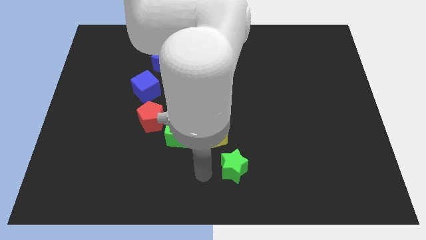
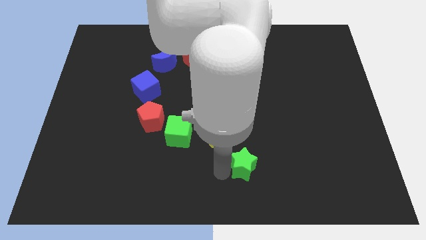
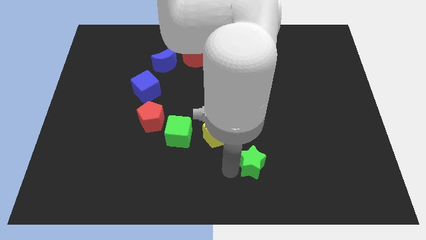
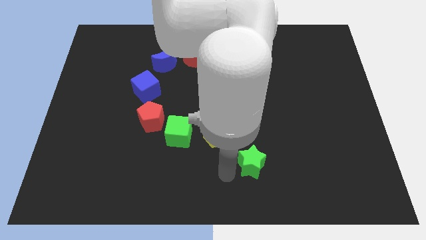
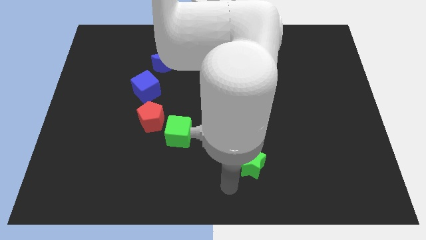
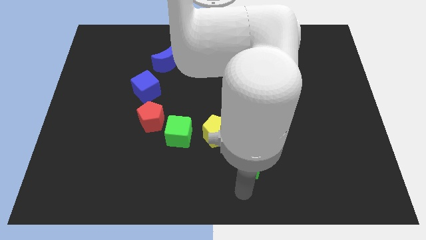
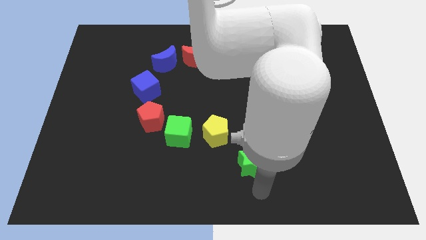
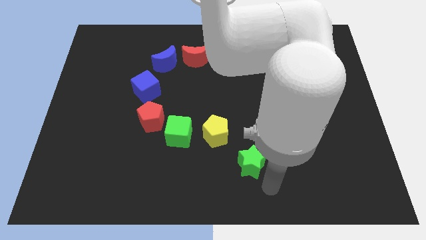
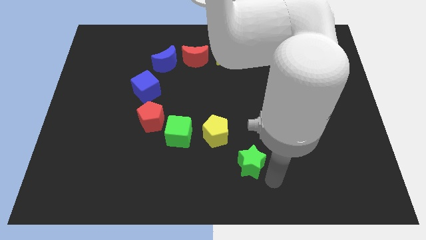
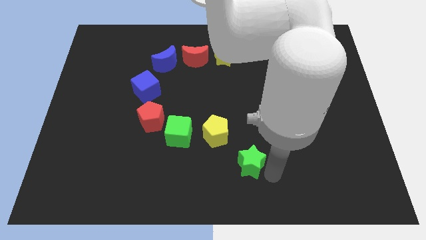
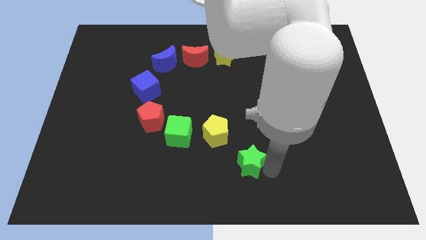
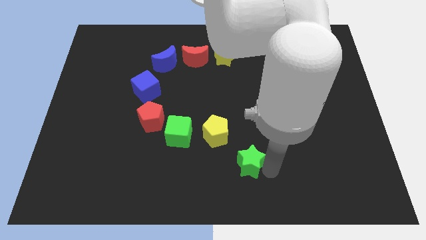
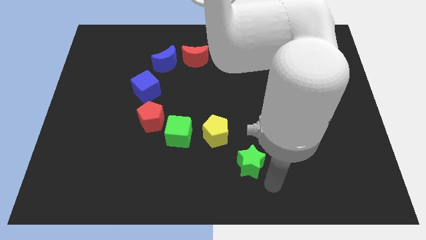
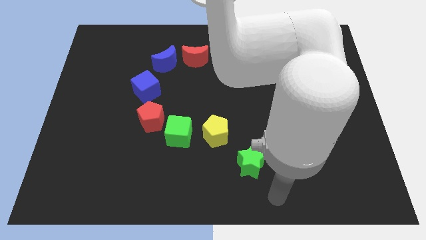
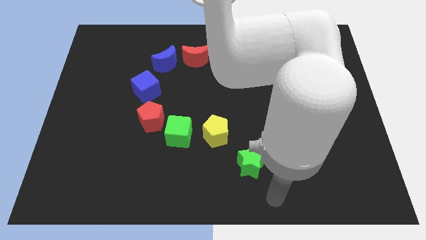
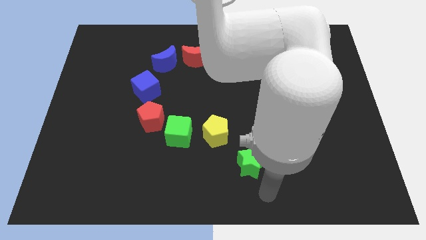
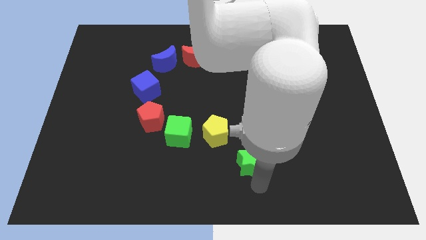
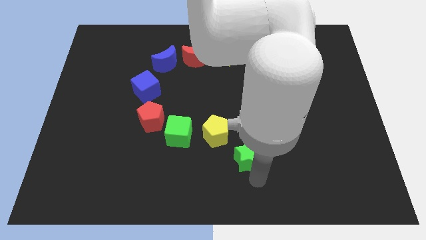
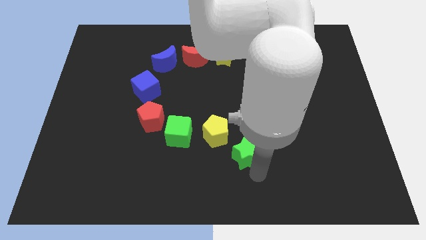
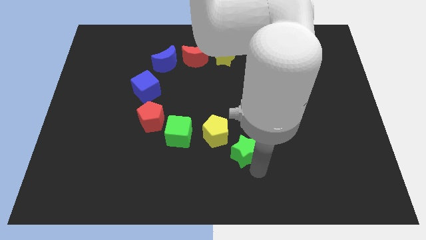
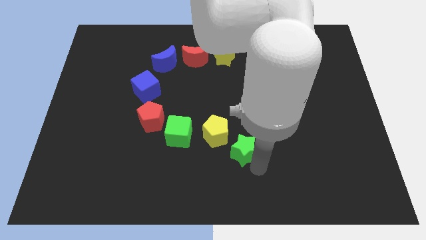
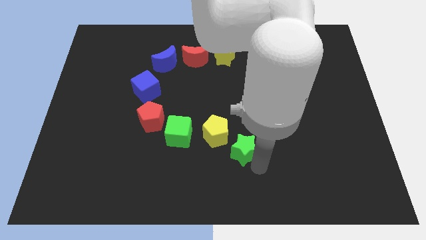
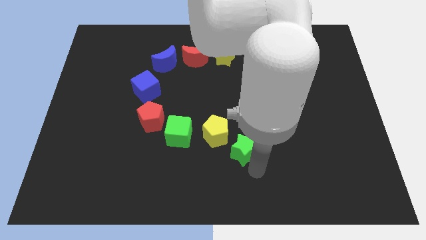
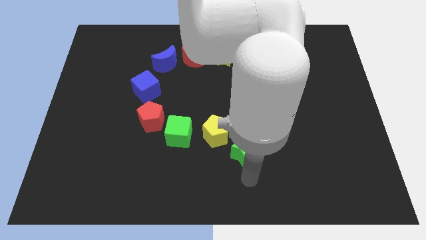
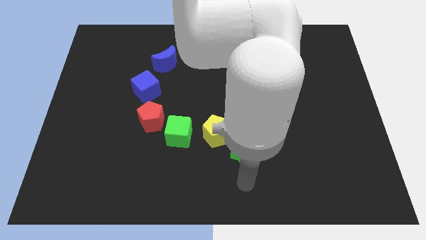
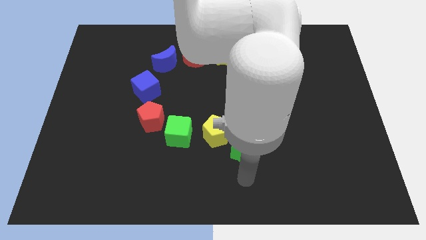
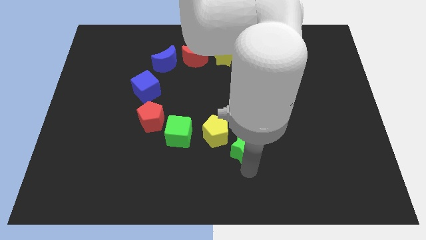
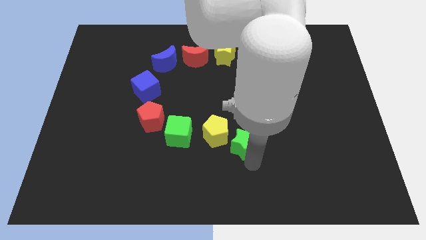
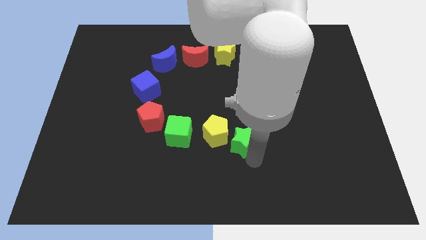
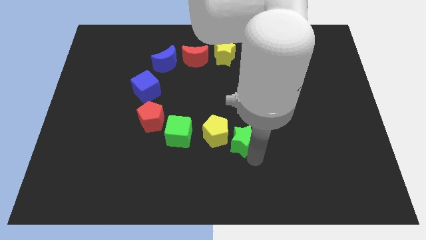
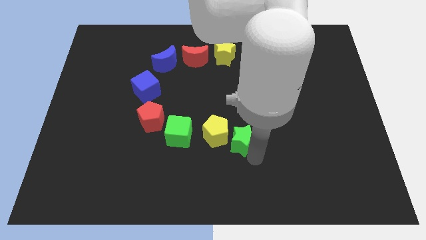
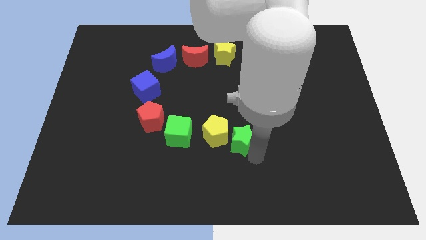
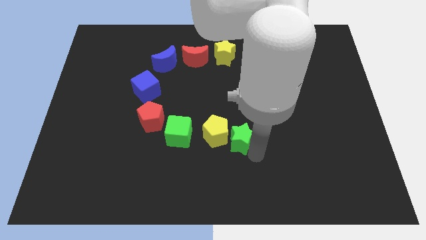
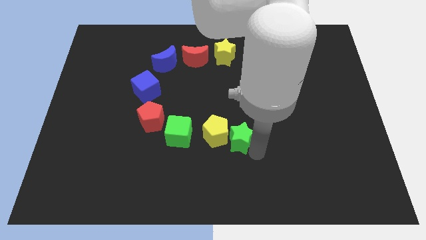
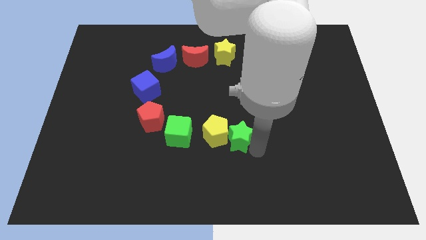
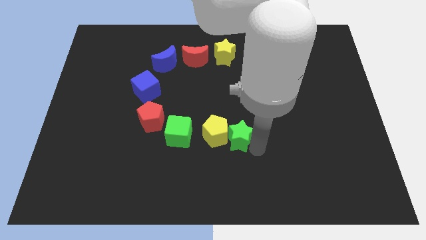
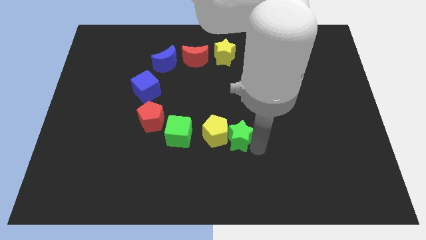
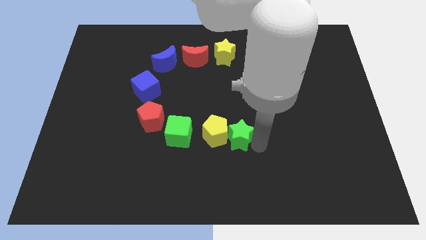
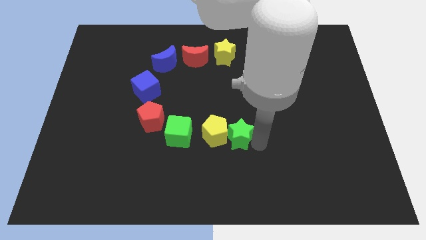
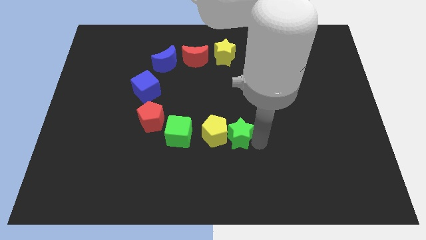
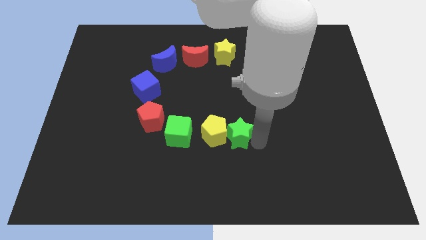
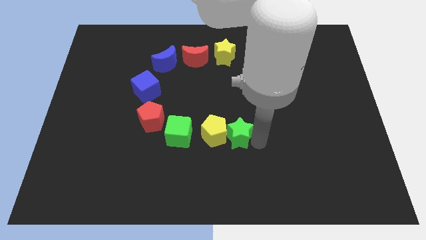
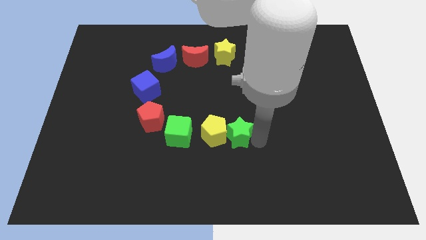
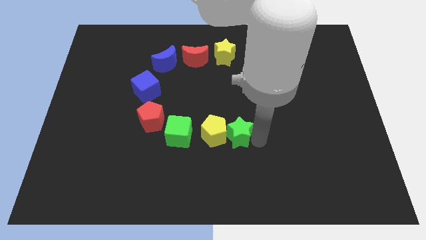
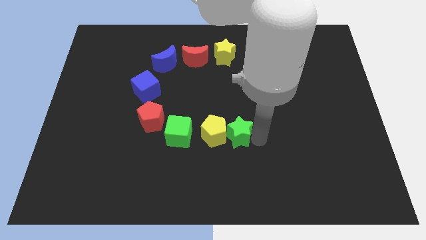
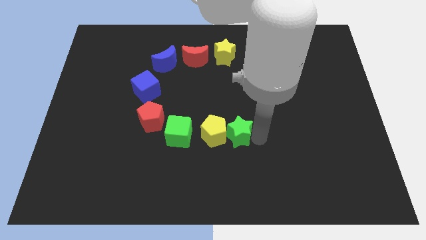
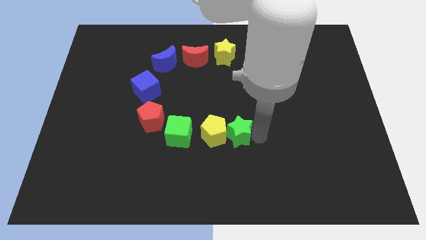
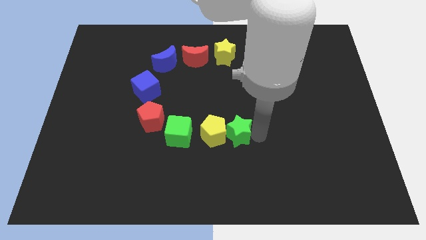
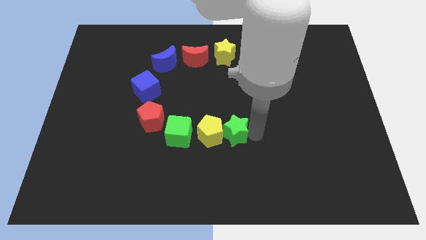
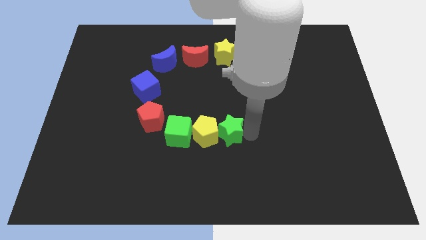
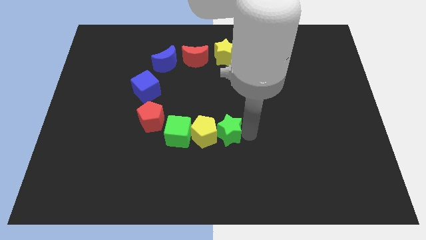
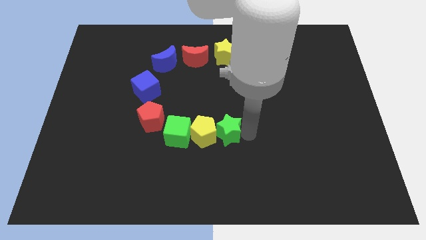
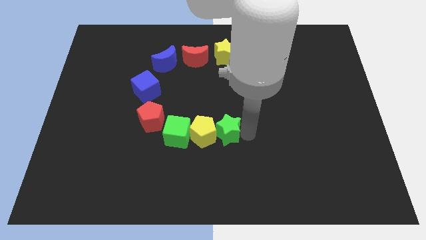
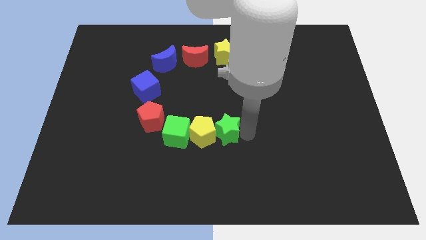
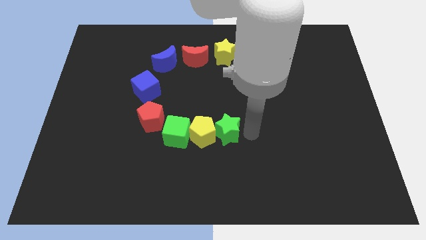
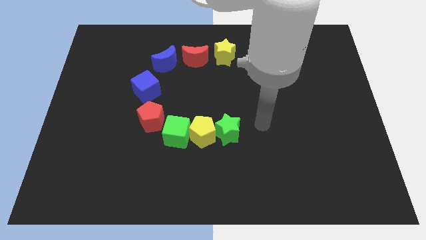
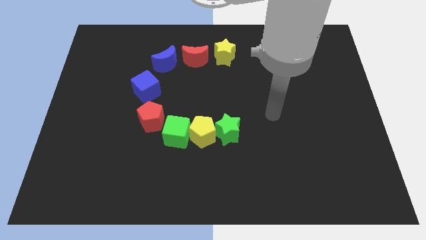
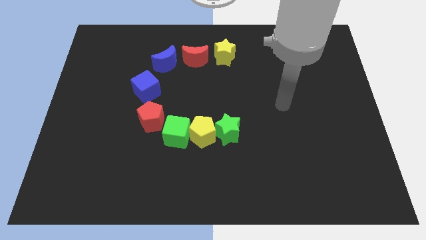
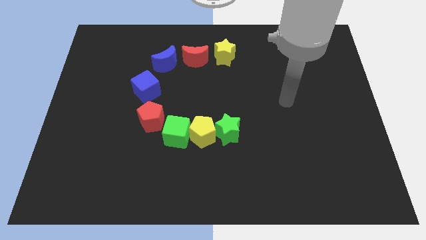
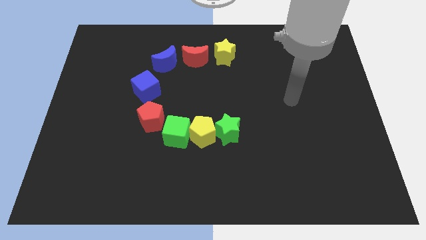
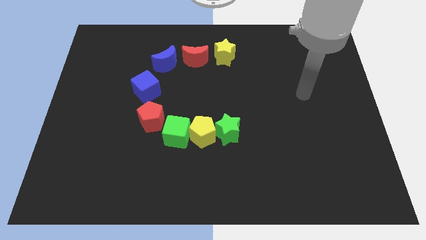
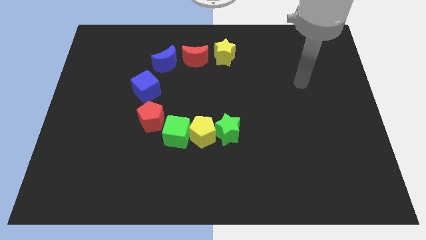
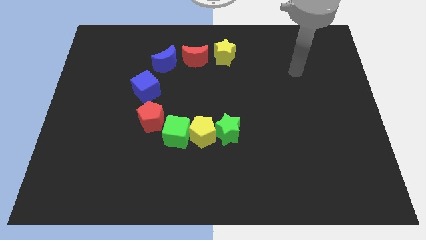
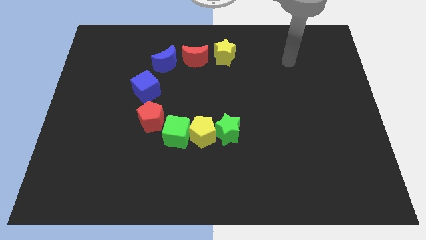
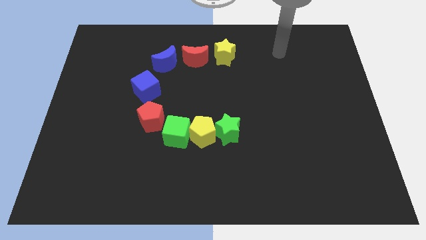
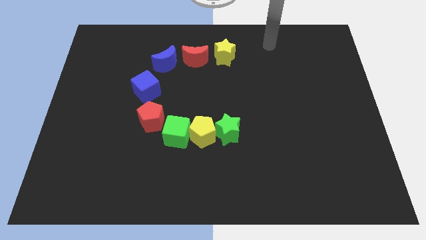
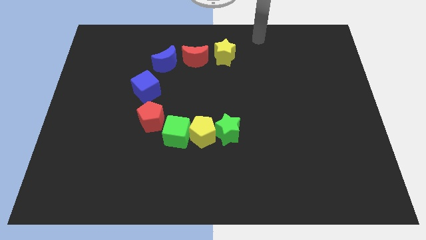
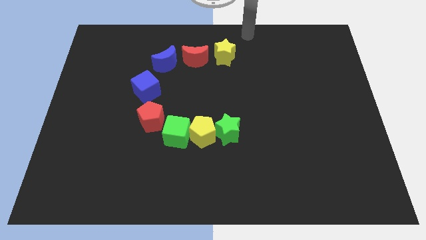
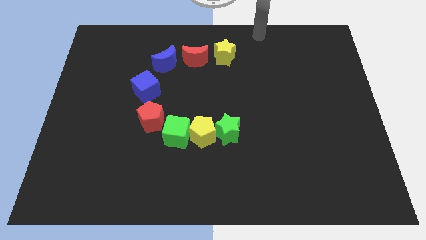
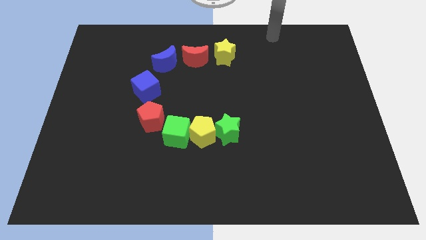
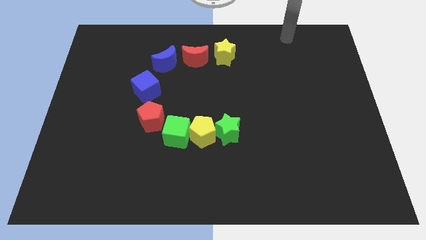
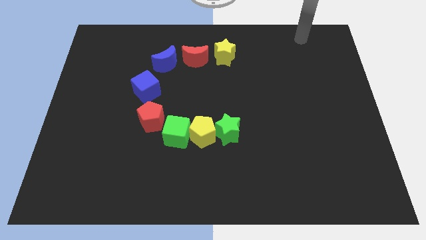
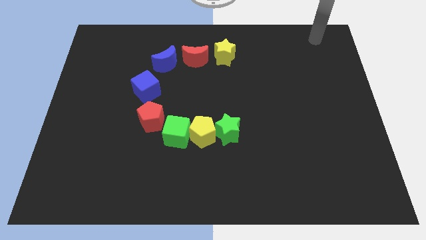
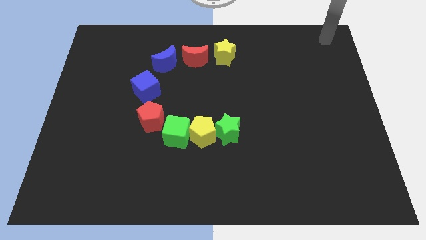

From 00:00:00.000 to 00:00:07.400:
put the green star into the yellow pentagon

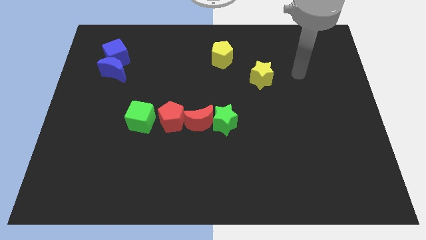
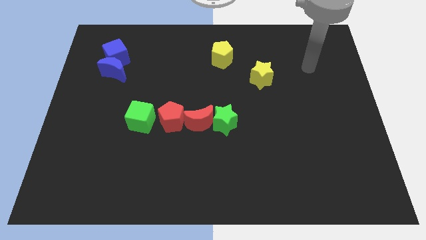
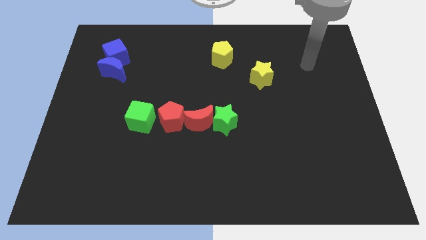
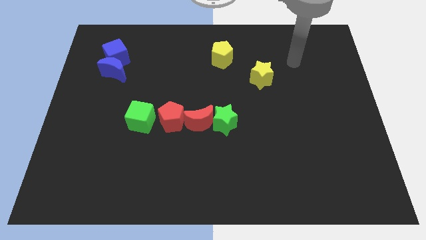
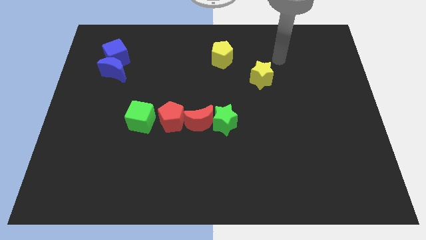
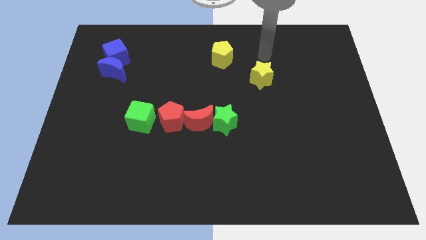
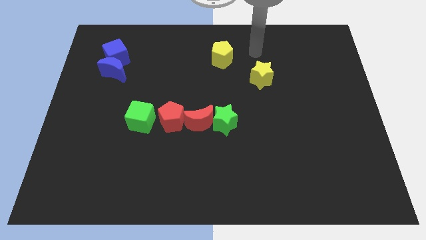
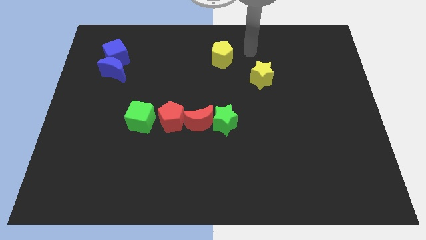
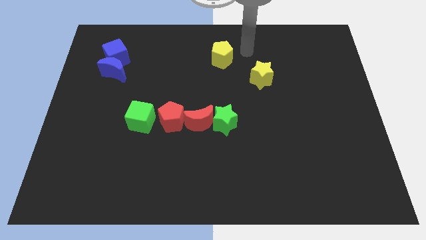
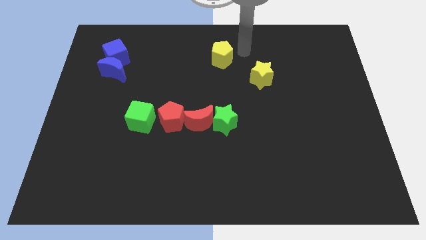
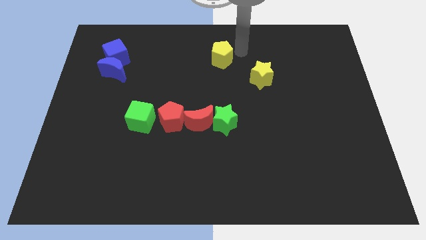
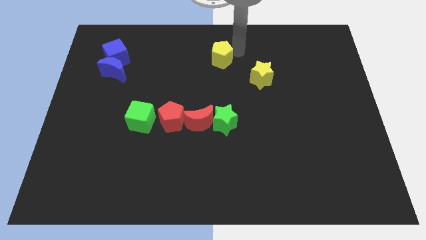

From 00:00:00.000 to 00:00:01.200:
place your arm to the top right side of the yellow pentagon

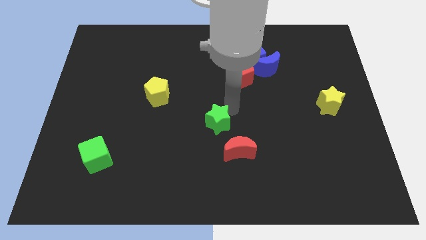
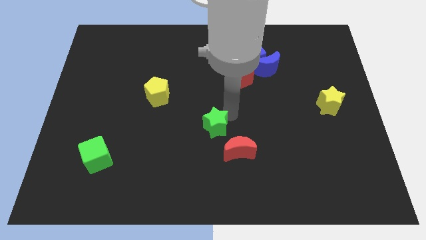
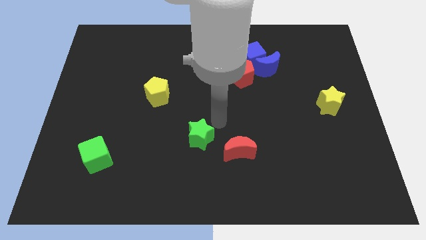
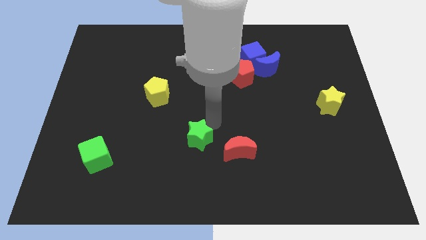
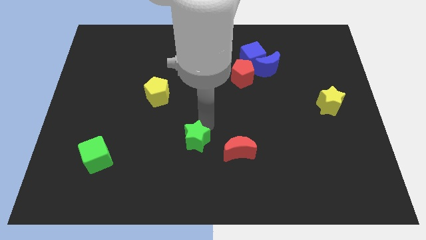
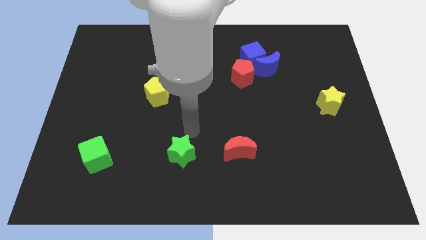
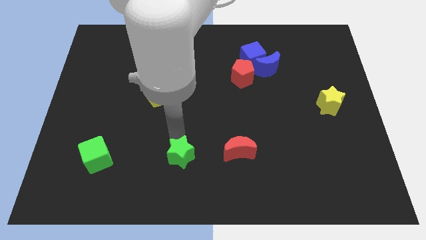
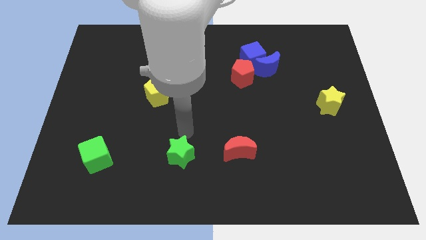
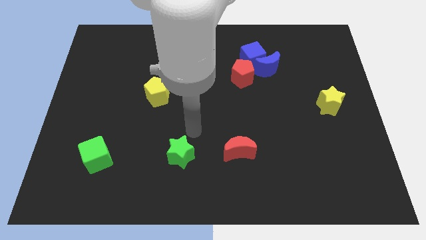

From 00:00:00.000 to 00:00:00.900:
push the green star towards the bottom side of the board
